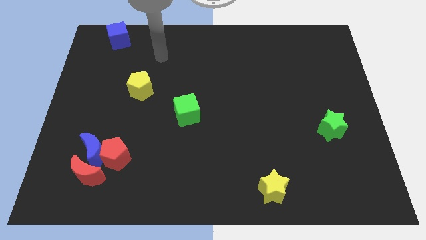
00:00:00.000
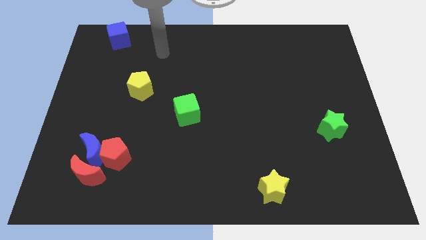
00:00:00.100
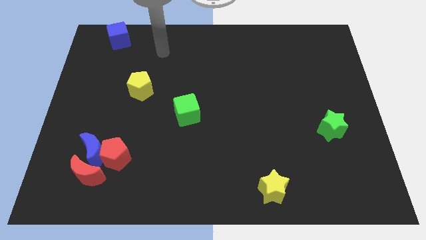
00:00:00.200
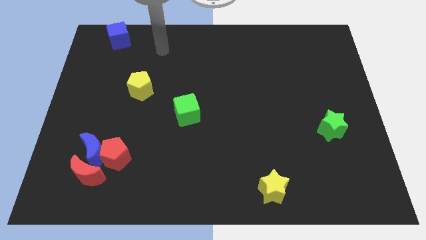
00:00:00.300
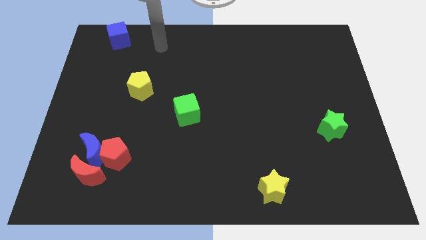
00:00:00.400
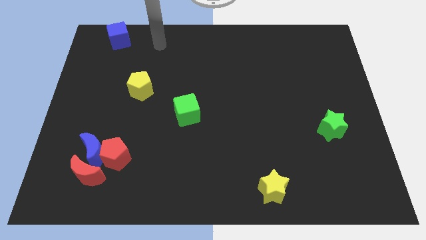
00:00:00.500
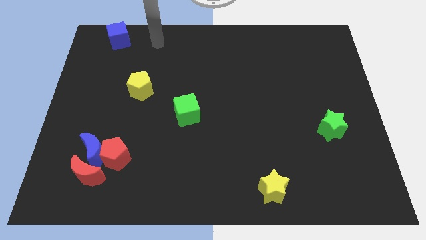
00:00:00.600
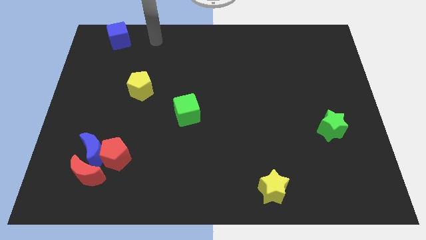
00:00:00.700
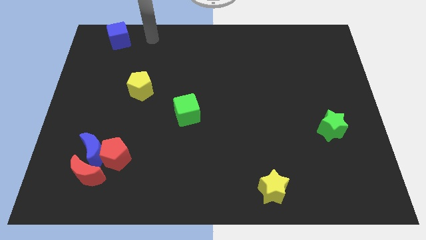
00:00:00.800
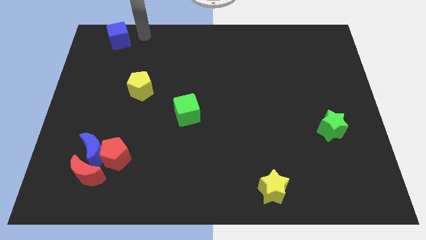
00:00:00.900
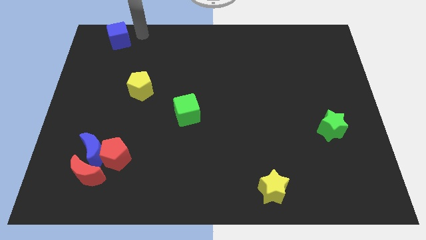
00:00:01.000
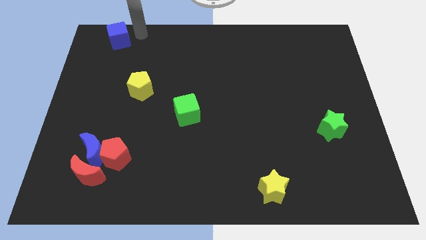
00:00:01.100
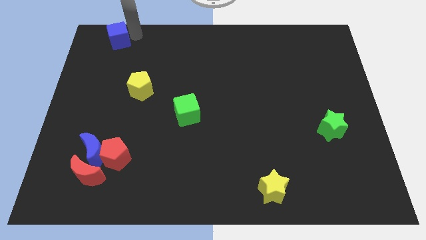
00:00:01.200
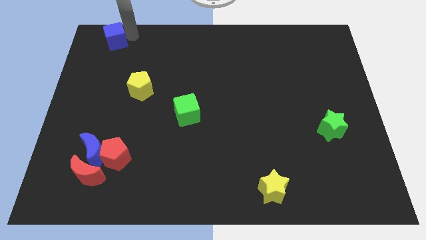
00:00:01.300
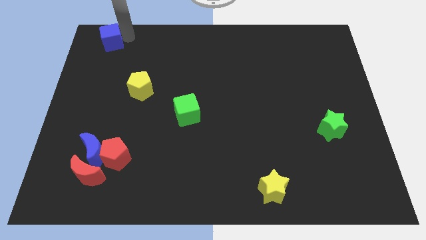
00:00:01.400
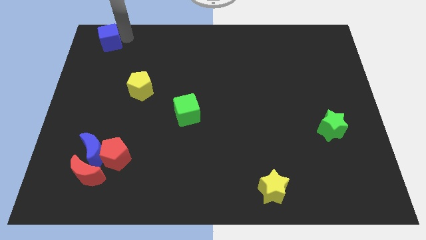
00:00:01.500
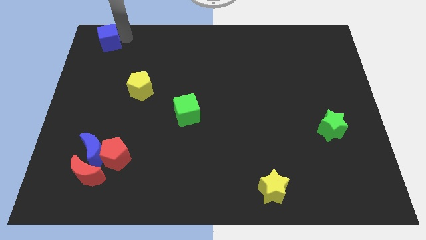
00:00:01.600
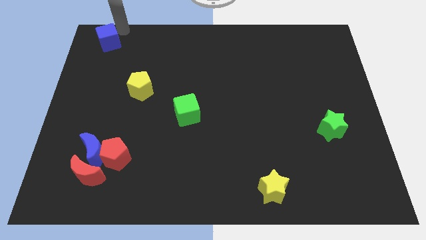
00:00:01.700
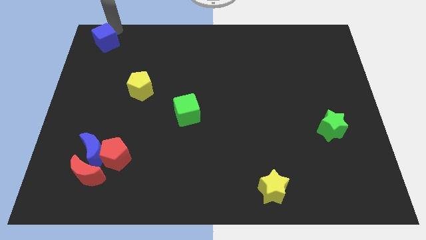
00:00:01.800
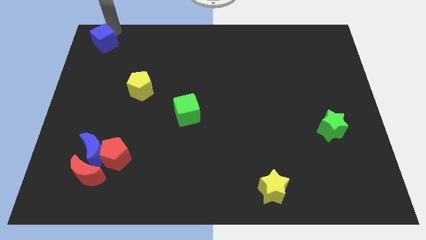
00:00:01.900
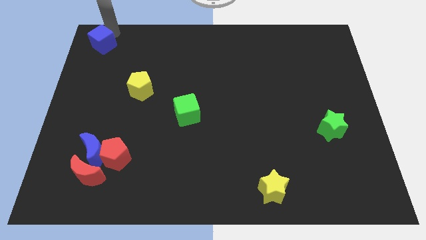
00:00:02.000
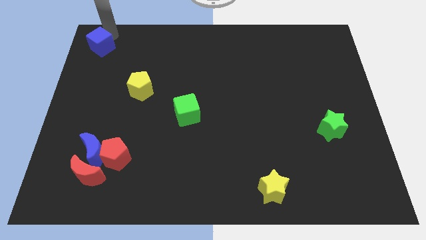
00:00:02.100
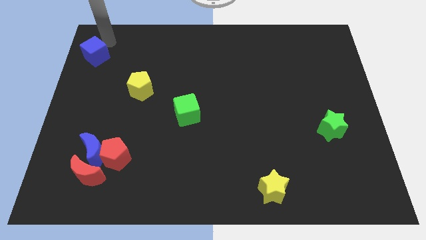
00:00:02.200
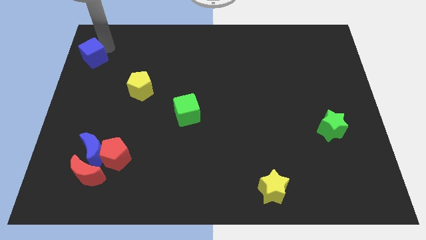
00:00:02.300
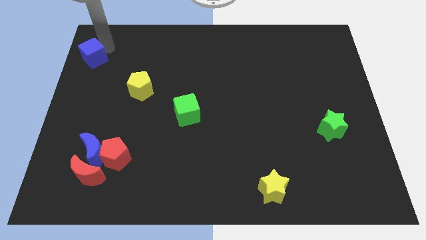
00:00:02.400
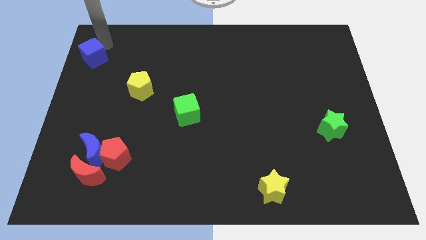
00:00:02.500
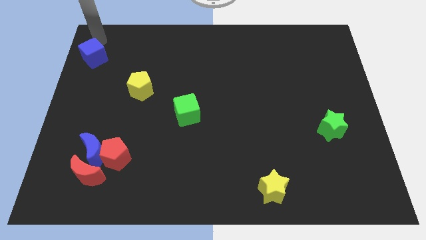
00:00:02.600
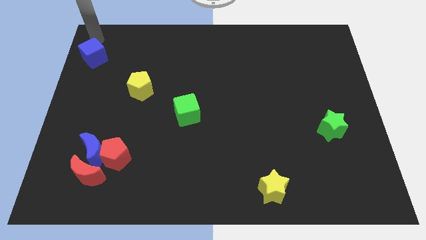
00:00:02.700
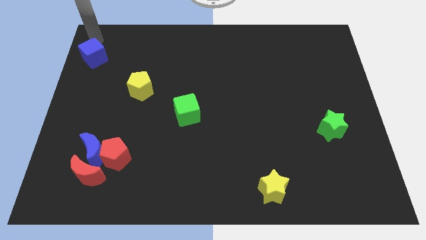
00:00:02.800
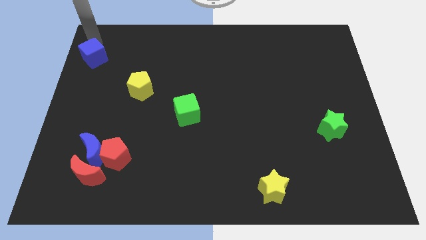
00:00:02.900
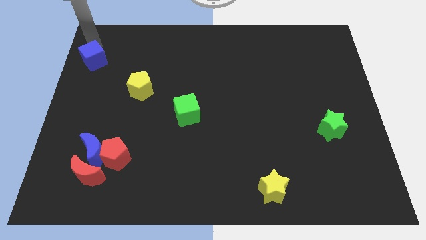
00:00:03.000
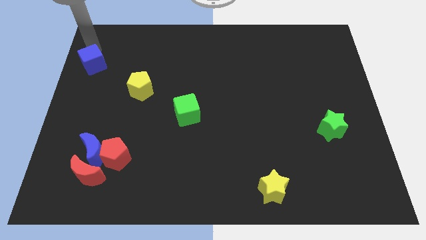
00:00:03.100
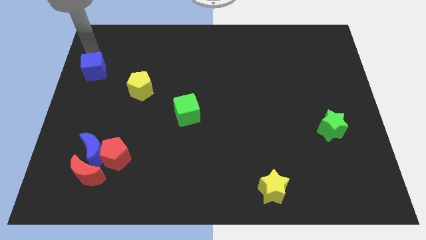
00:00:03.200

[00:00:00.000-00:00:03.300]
move the blue cube parallel to the left of the yellow pentagon

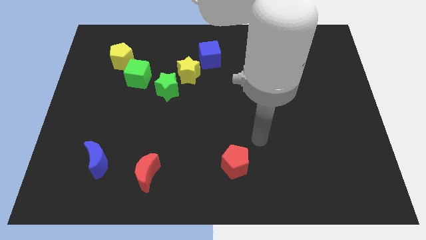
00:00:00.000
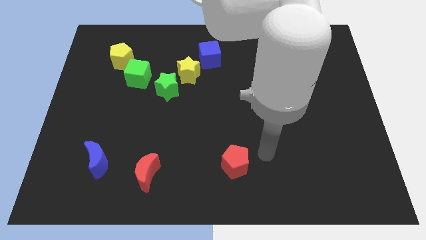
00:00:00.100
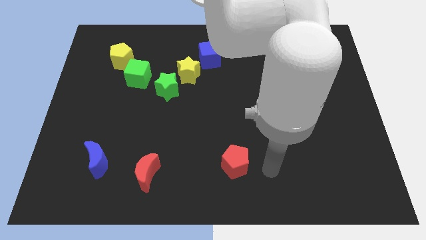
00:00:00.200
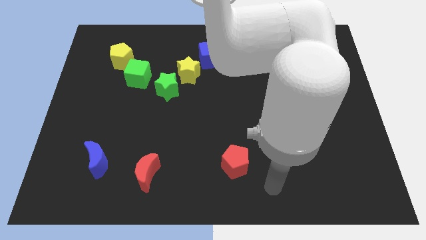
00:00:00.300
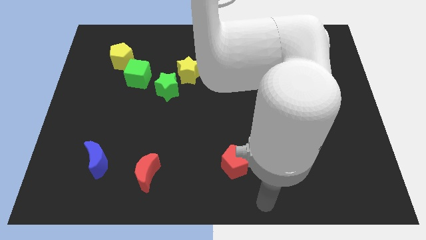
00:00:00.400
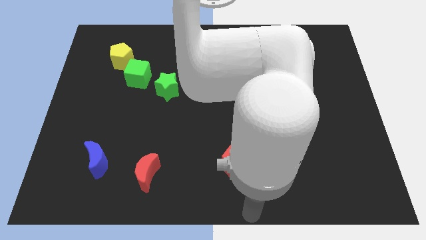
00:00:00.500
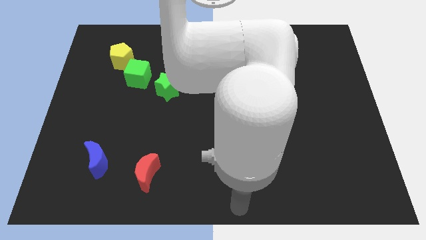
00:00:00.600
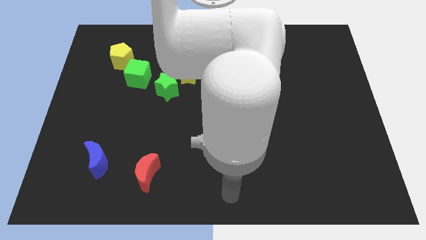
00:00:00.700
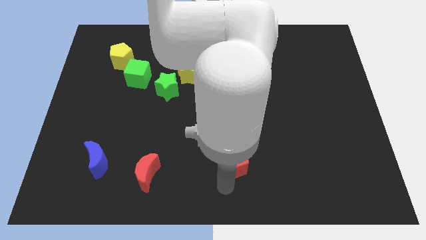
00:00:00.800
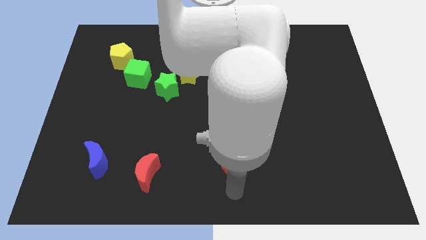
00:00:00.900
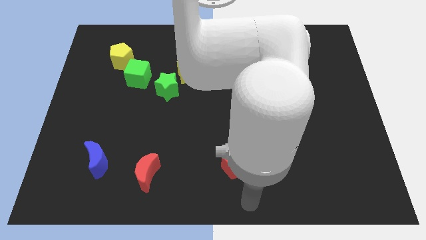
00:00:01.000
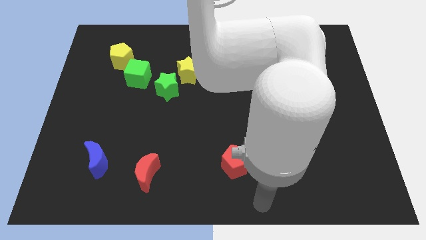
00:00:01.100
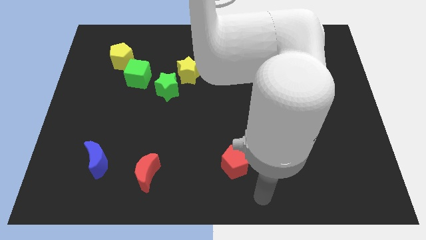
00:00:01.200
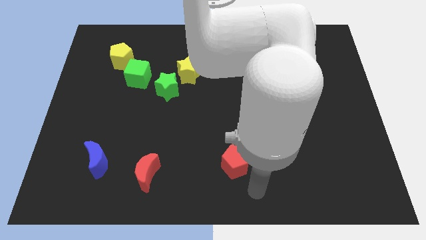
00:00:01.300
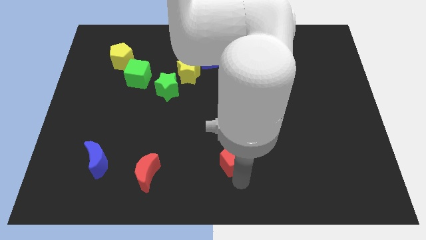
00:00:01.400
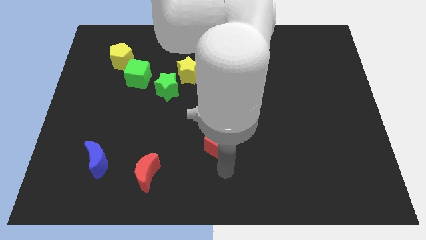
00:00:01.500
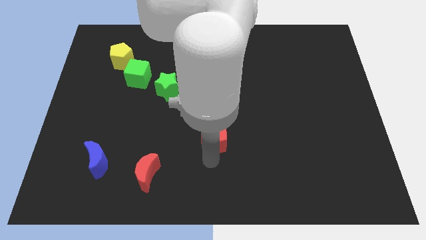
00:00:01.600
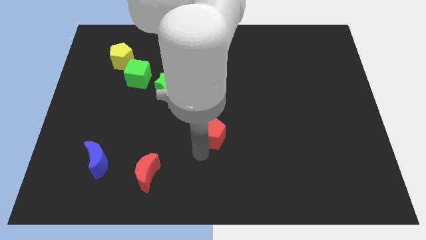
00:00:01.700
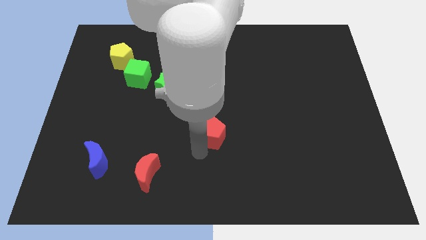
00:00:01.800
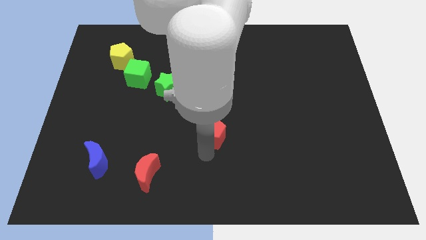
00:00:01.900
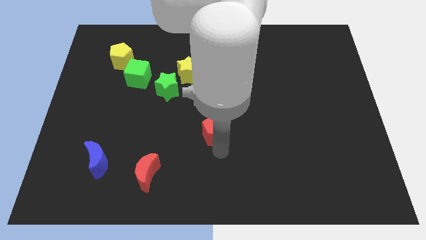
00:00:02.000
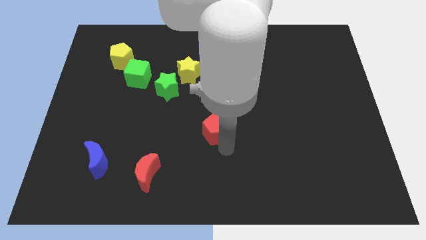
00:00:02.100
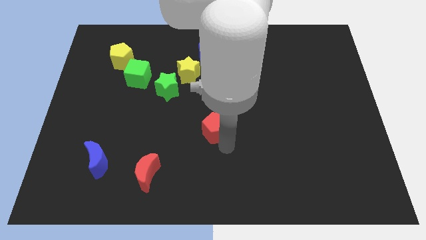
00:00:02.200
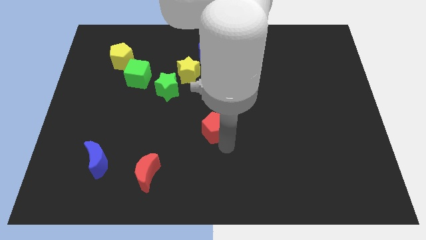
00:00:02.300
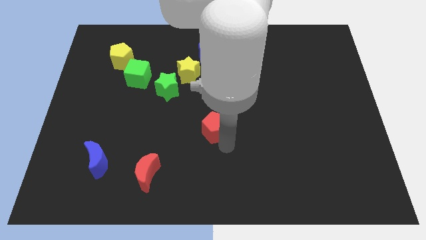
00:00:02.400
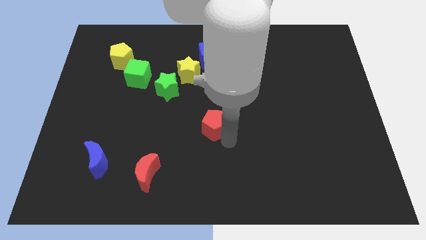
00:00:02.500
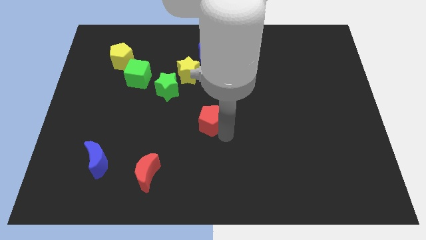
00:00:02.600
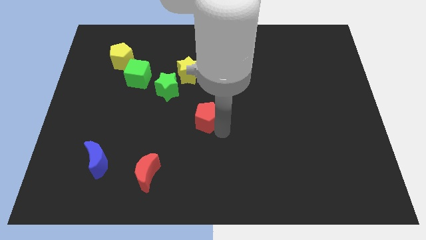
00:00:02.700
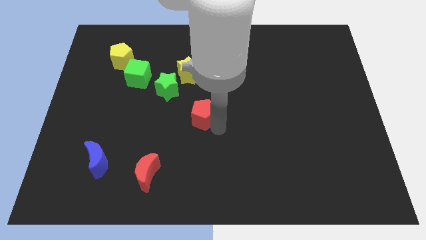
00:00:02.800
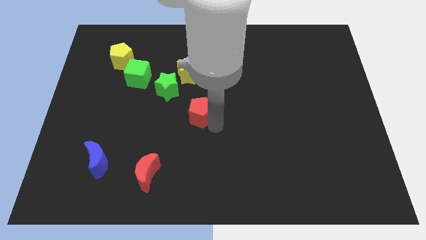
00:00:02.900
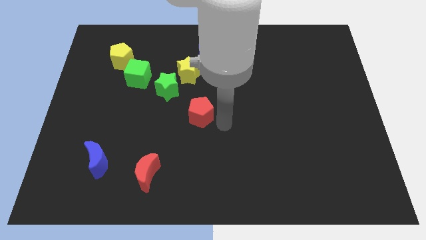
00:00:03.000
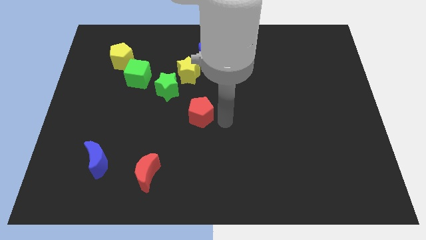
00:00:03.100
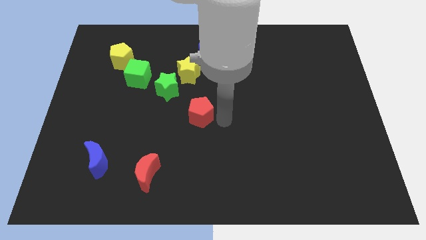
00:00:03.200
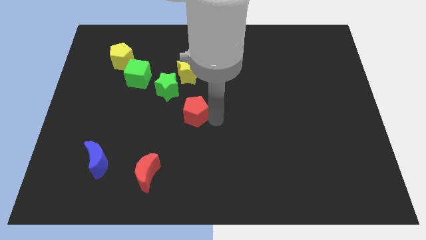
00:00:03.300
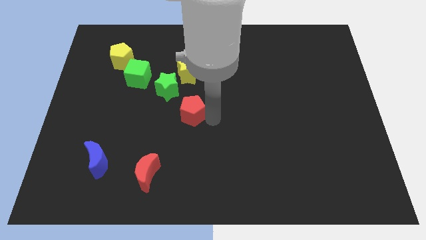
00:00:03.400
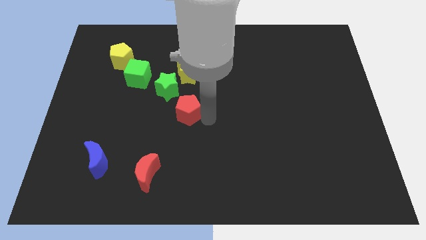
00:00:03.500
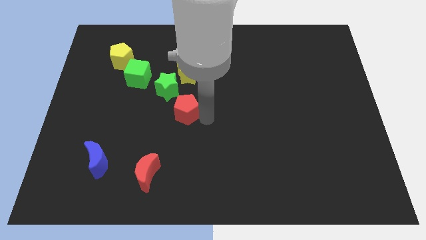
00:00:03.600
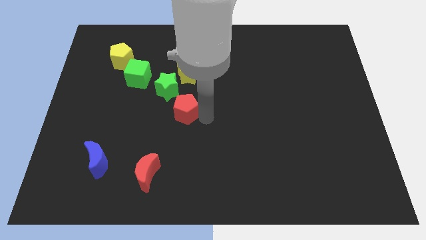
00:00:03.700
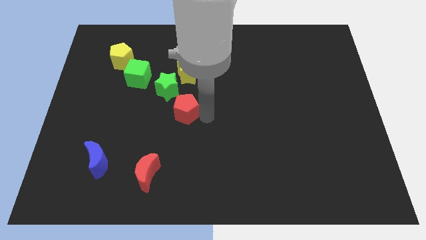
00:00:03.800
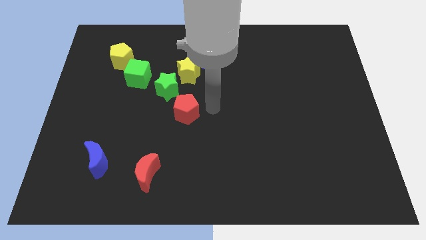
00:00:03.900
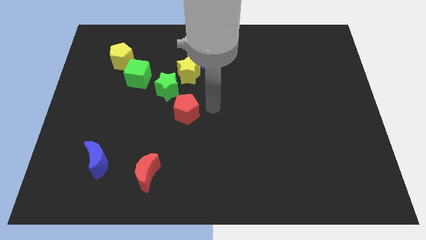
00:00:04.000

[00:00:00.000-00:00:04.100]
place red pentagon below yellow star

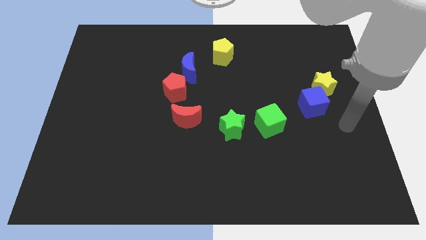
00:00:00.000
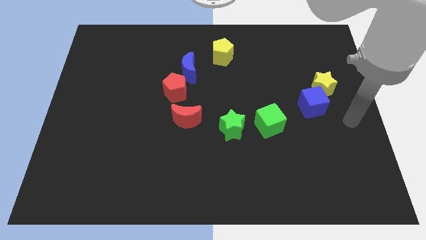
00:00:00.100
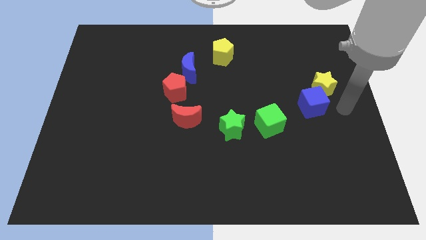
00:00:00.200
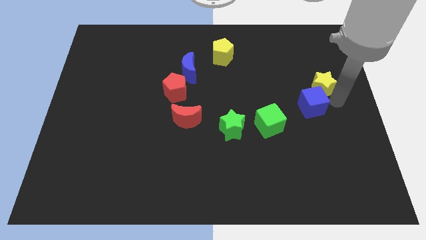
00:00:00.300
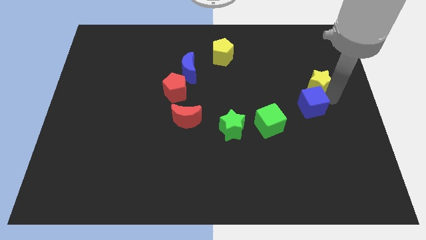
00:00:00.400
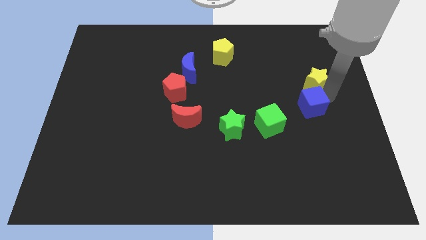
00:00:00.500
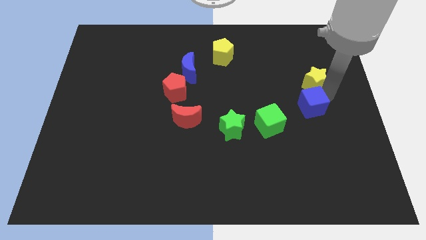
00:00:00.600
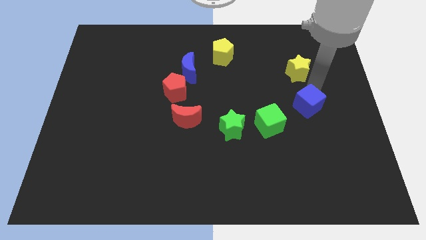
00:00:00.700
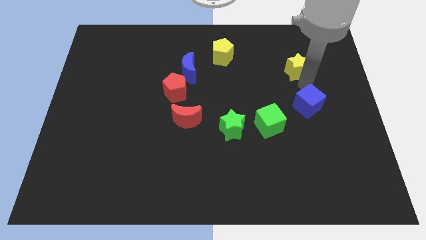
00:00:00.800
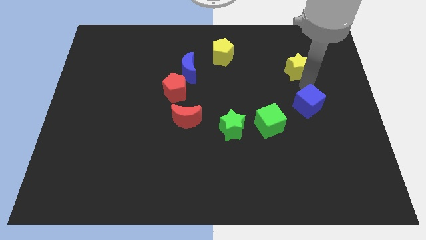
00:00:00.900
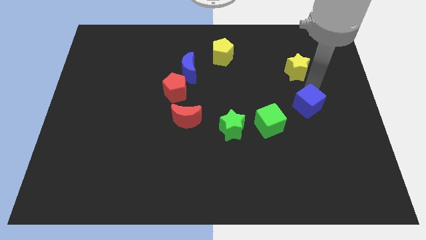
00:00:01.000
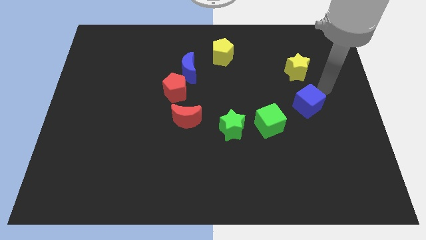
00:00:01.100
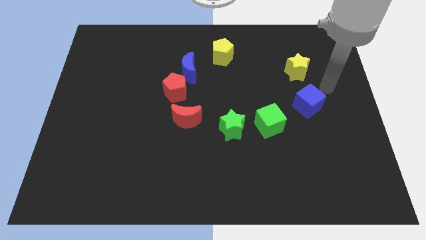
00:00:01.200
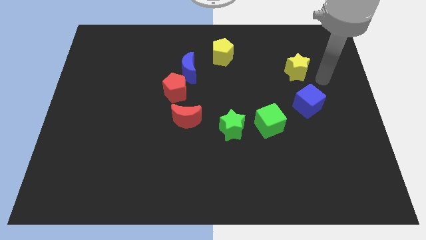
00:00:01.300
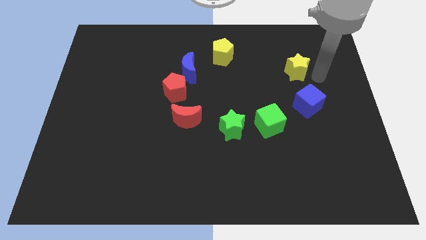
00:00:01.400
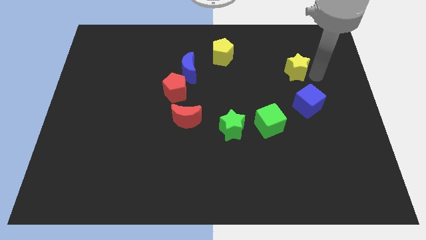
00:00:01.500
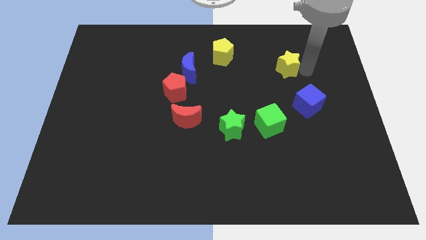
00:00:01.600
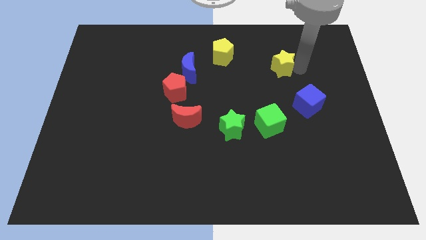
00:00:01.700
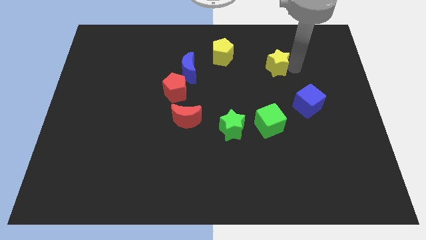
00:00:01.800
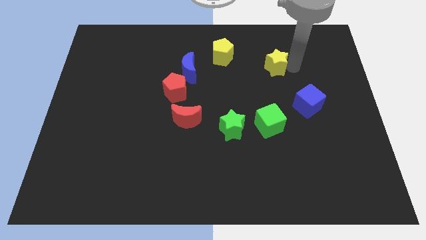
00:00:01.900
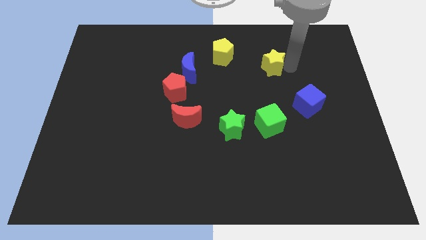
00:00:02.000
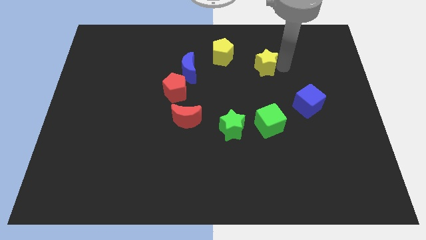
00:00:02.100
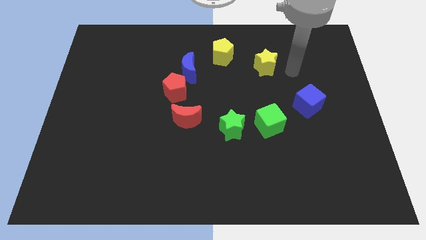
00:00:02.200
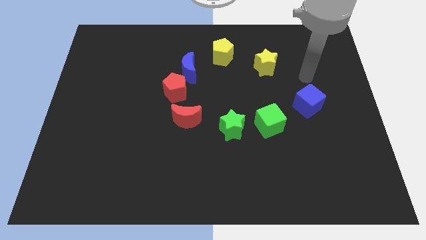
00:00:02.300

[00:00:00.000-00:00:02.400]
move the yellow star near to the yellow pentagon
